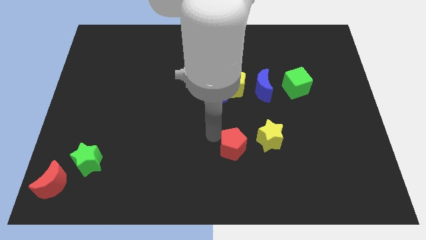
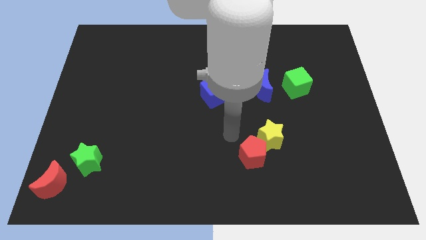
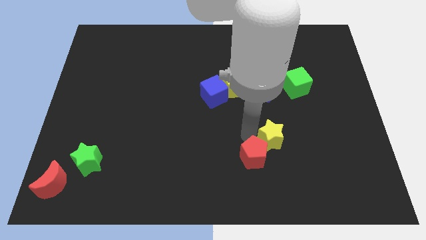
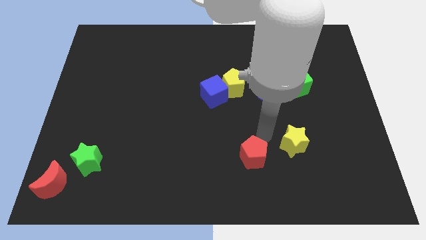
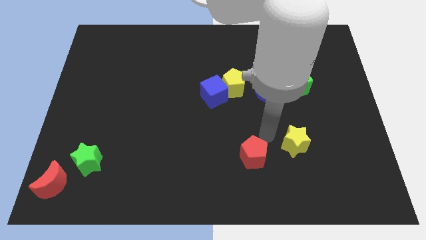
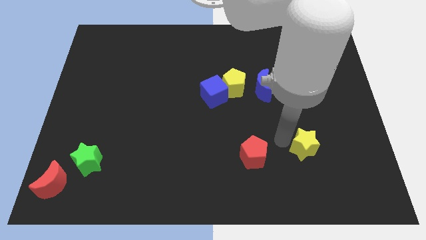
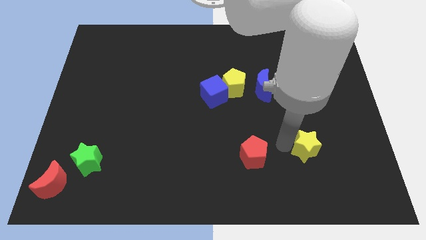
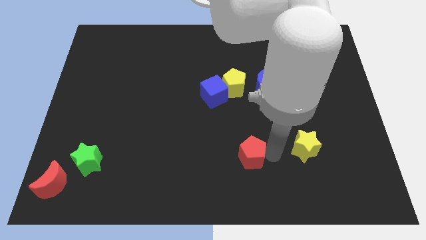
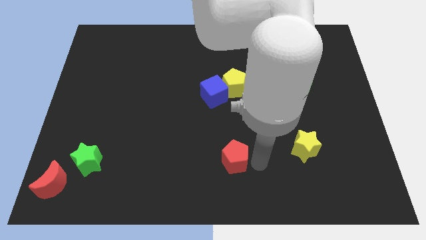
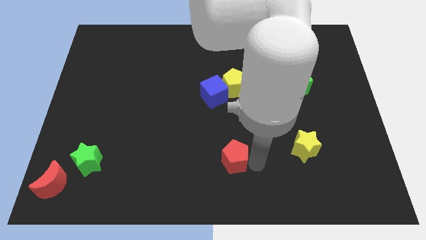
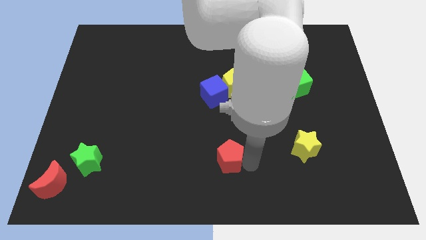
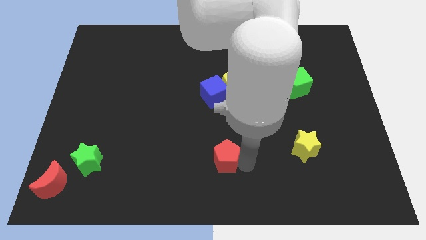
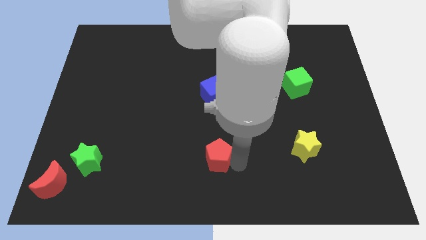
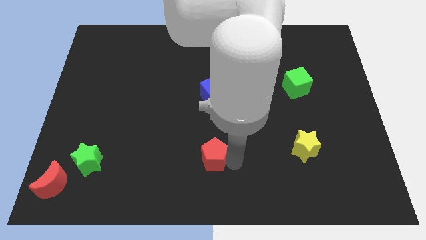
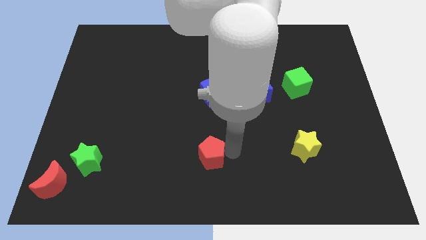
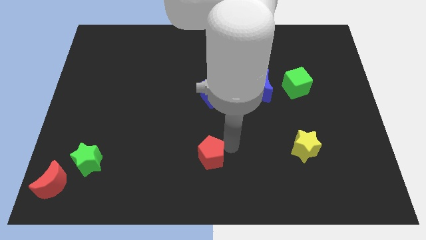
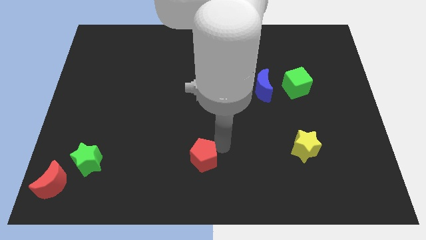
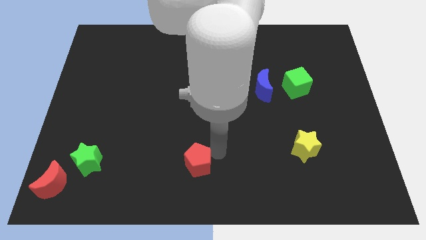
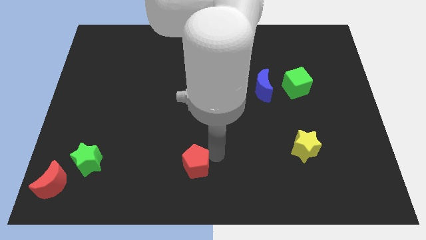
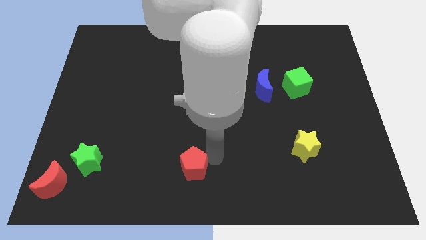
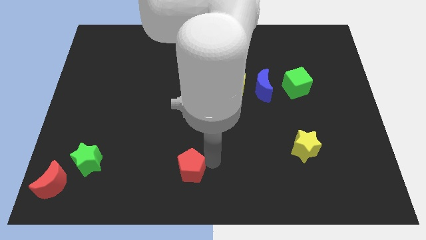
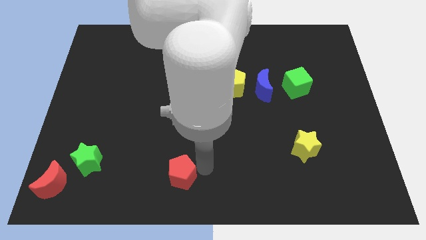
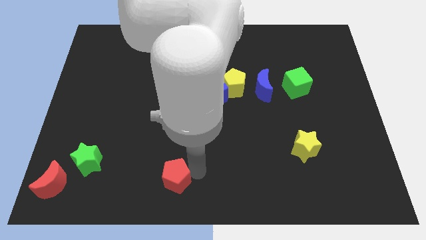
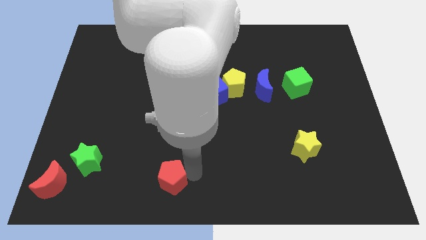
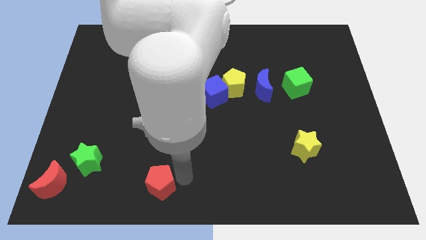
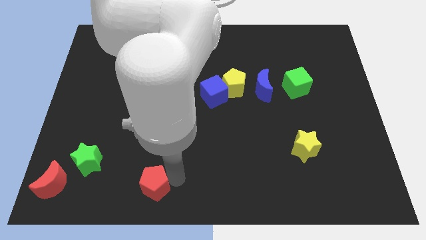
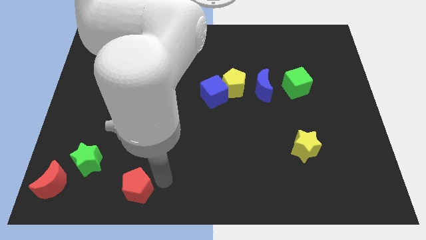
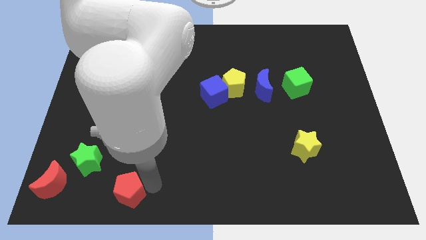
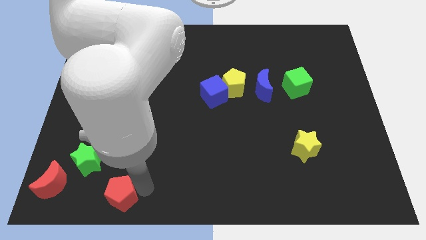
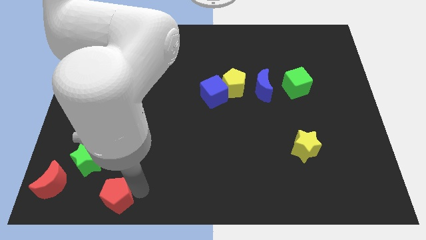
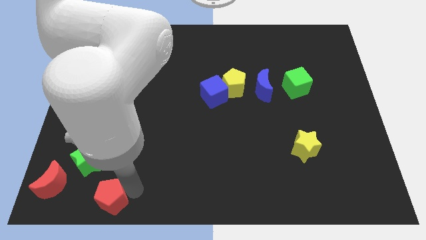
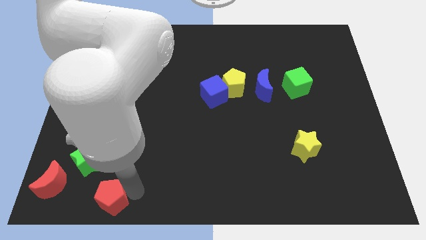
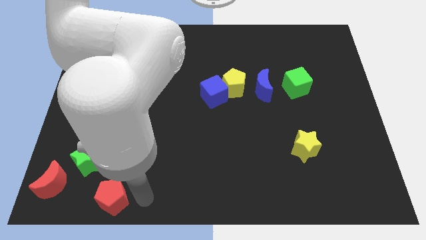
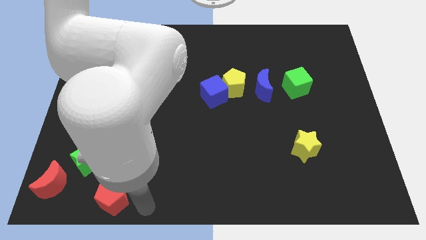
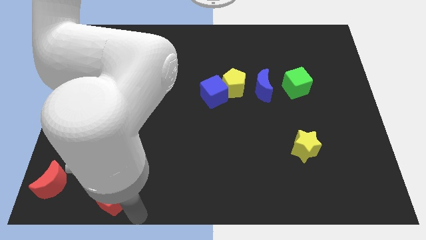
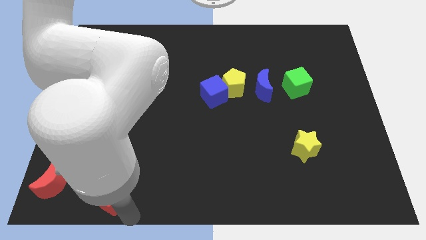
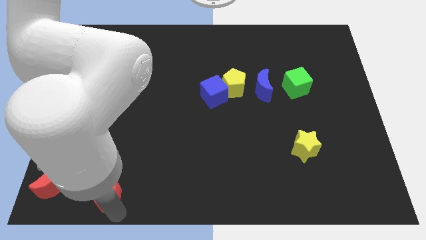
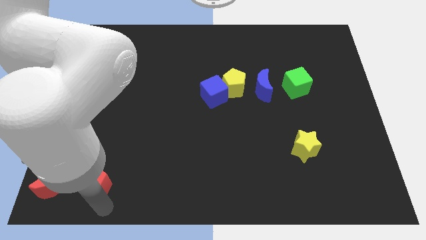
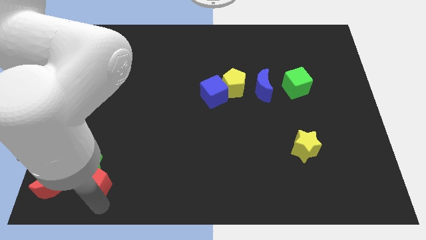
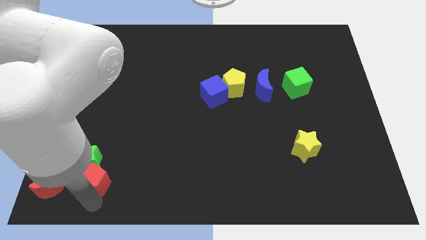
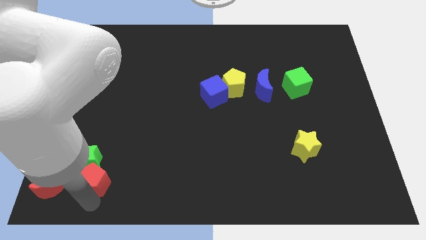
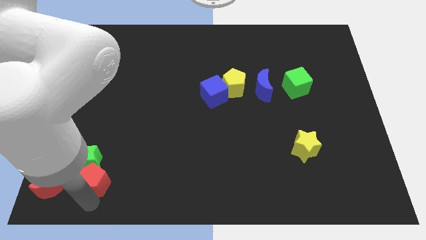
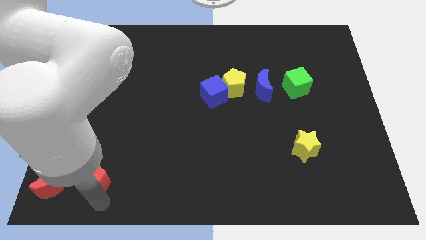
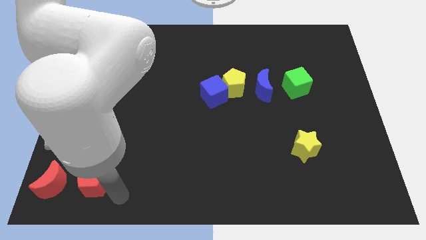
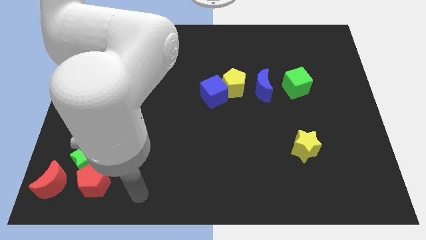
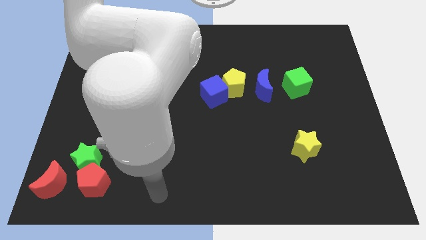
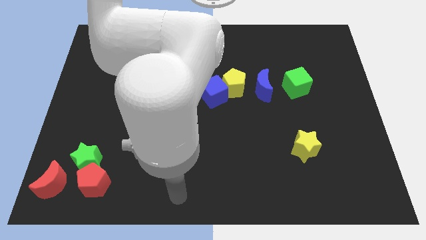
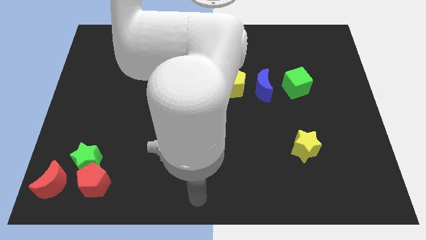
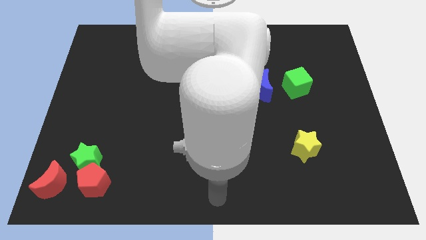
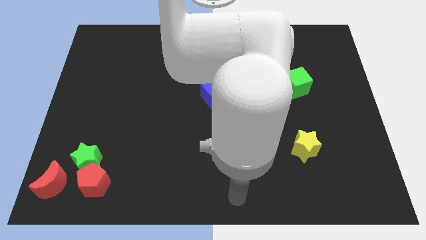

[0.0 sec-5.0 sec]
place the red pentagon right to the red crescent

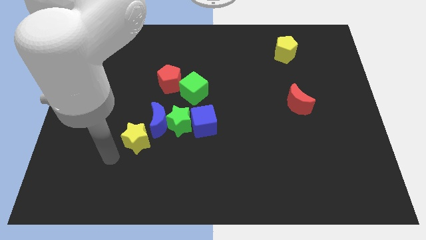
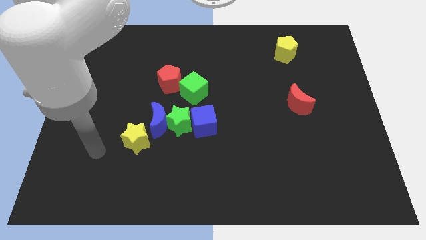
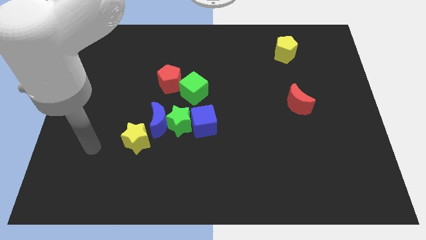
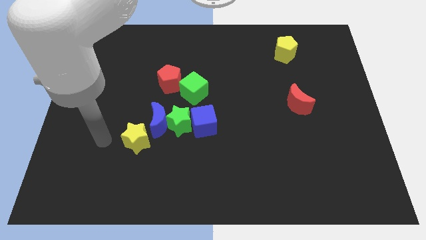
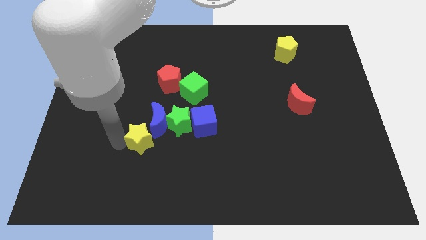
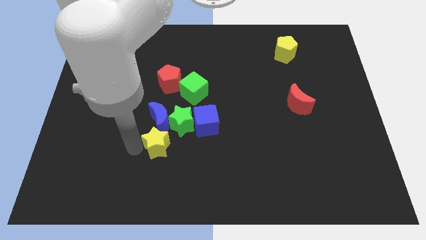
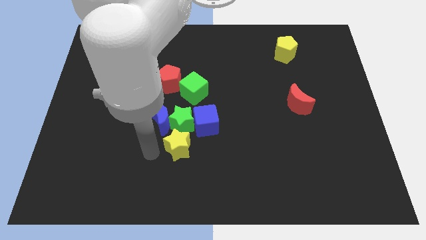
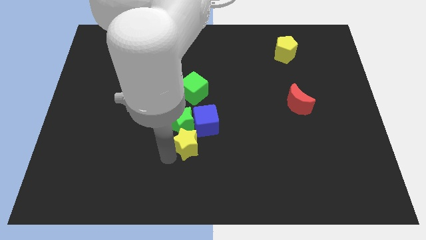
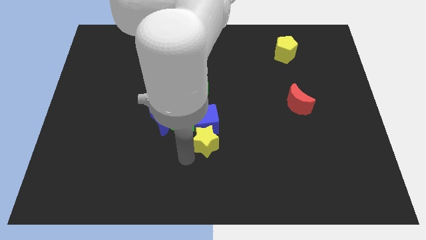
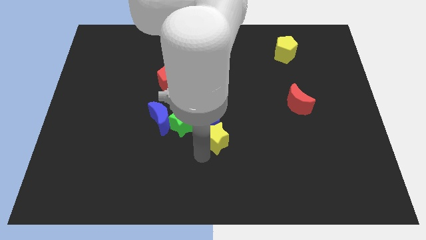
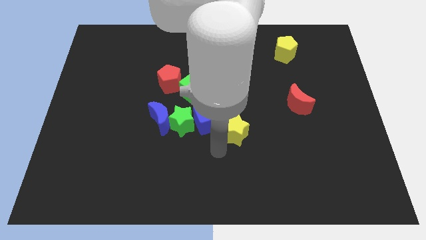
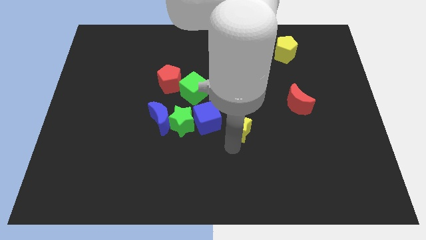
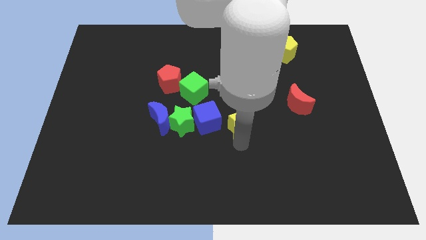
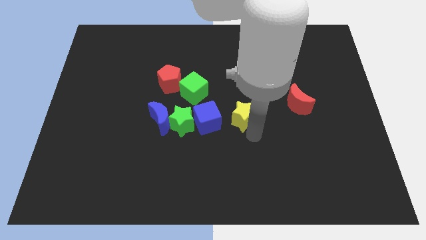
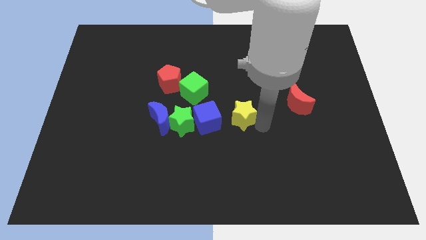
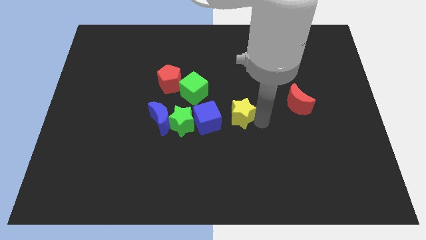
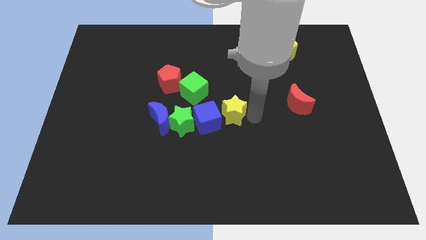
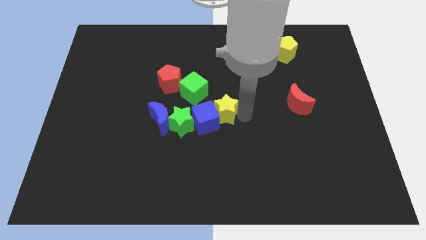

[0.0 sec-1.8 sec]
push the yellow star parallel right to the blue moon

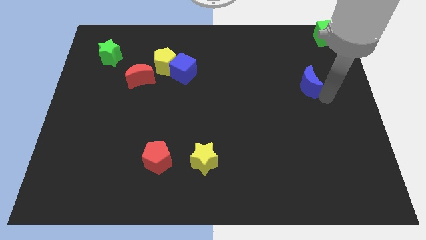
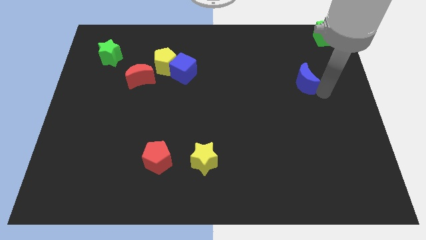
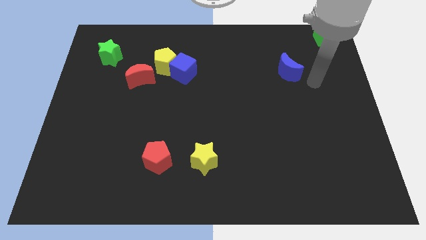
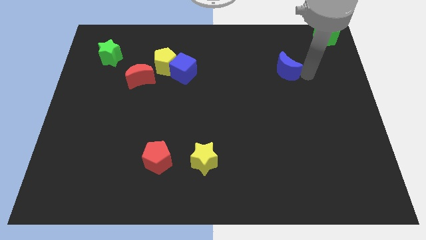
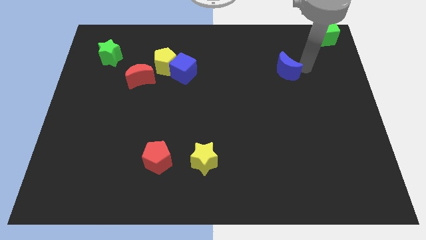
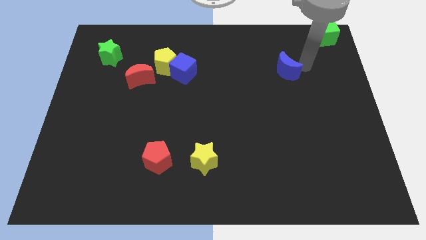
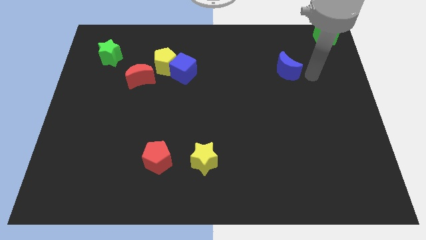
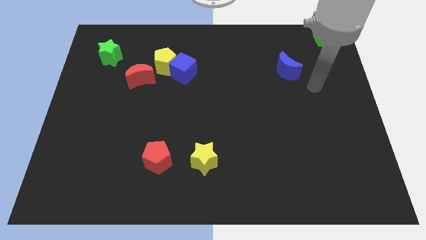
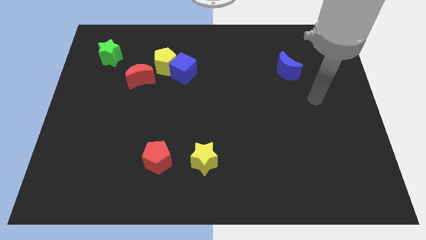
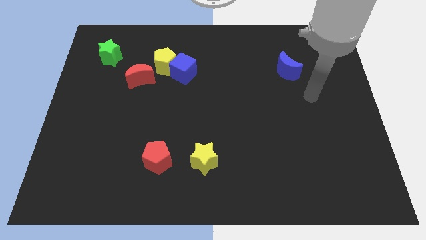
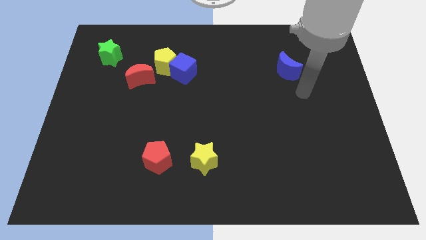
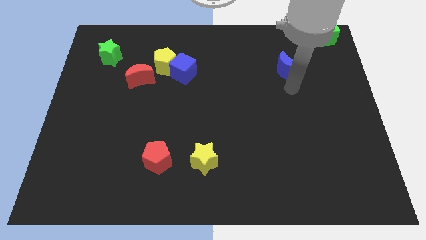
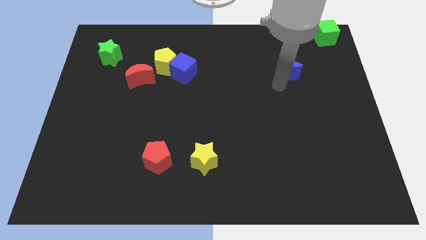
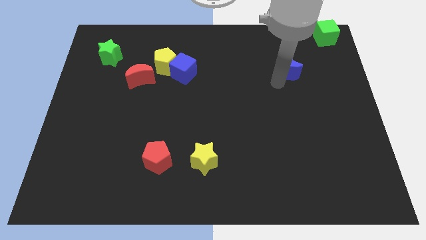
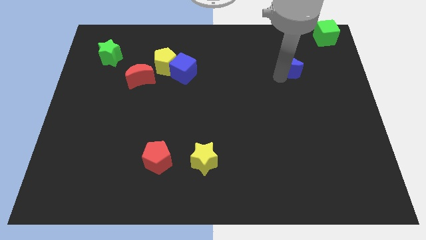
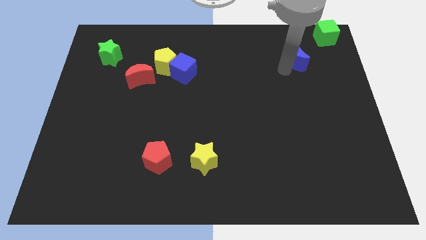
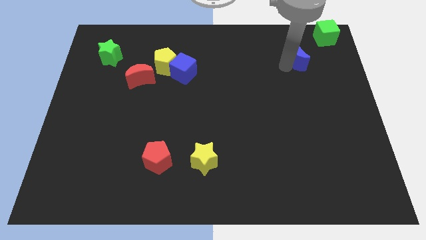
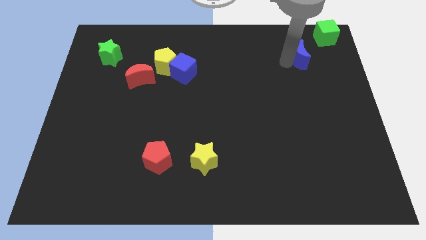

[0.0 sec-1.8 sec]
drag the blue moon towards the green cube

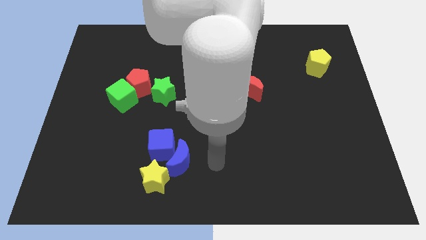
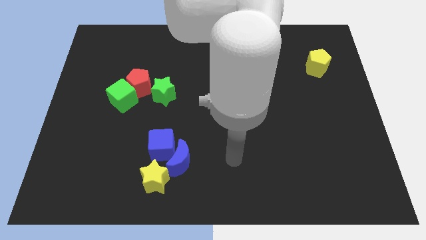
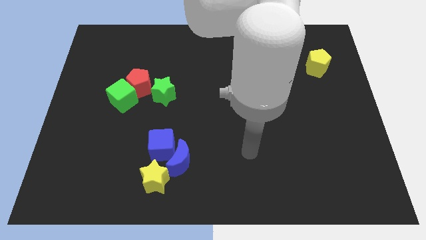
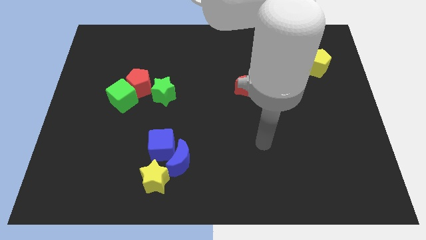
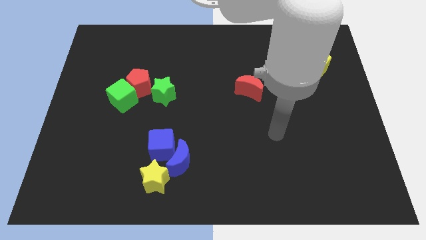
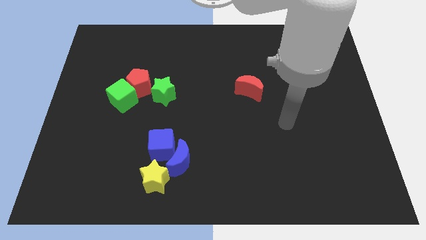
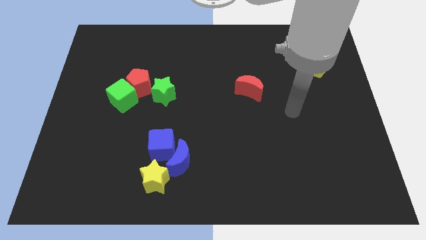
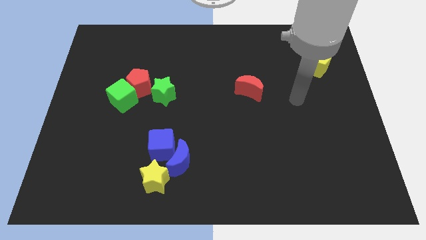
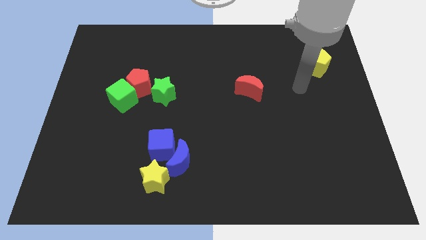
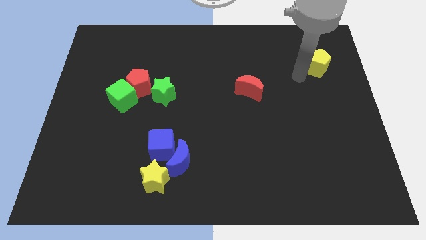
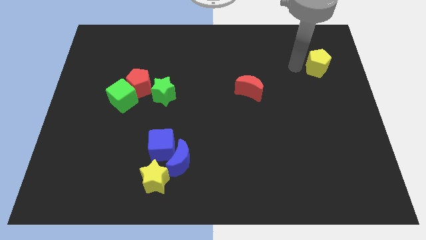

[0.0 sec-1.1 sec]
point your arm at the left of the yellow pentagon
